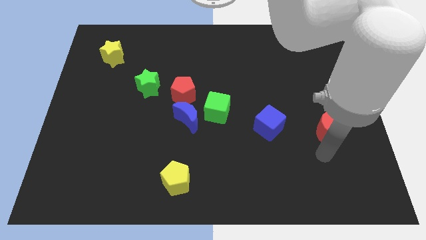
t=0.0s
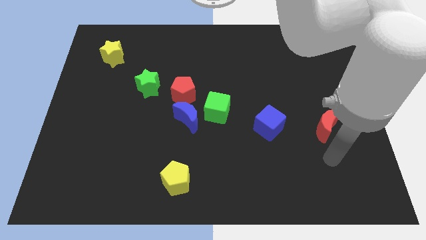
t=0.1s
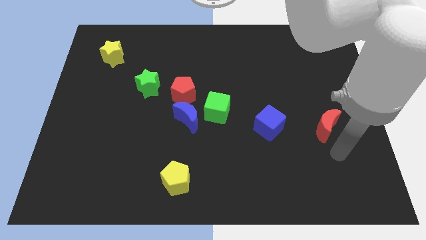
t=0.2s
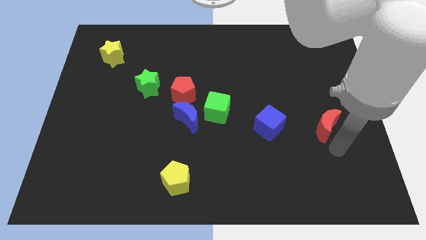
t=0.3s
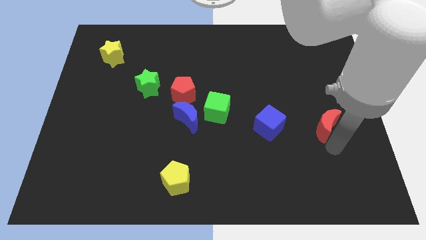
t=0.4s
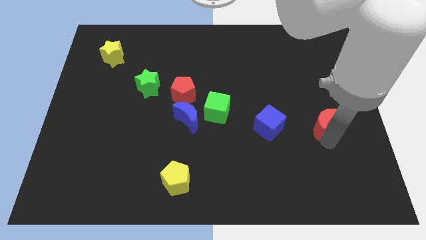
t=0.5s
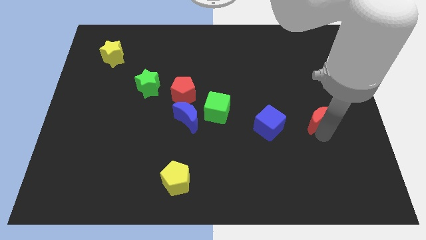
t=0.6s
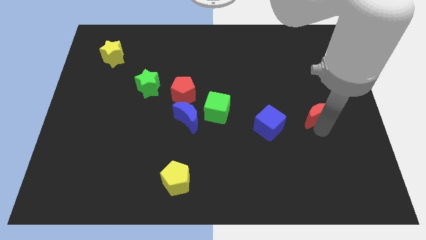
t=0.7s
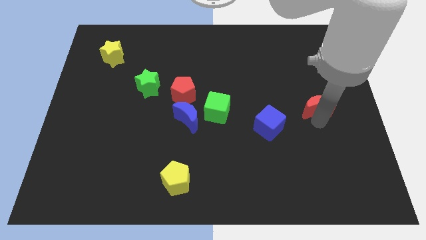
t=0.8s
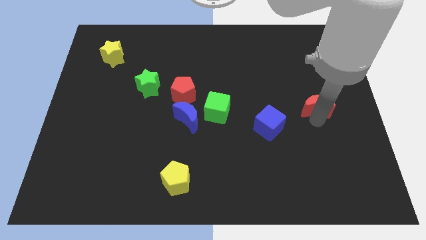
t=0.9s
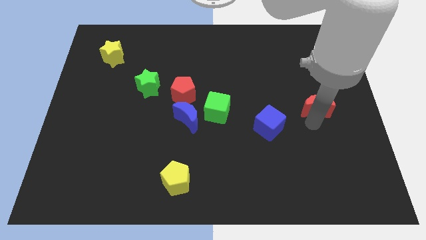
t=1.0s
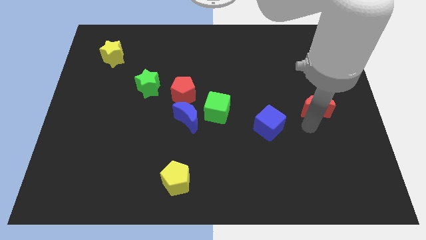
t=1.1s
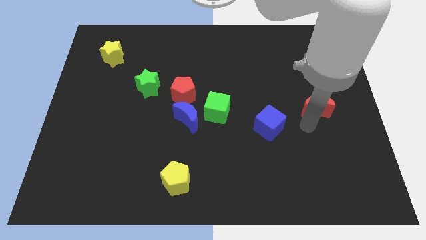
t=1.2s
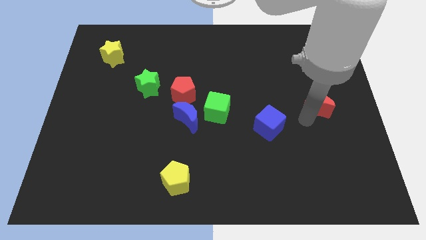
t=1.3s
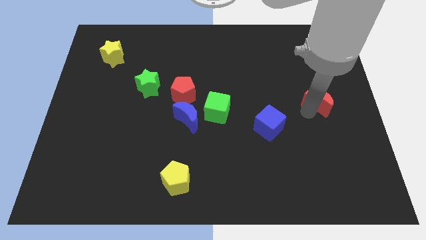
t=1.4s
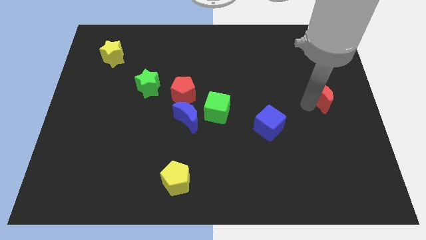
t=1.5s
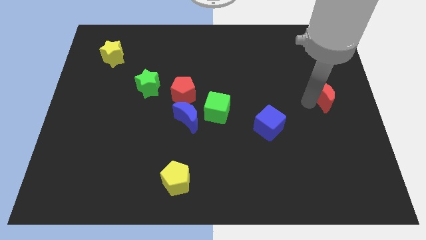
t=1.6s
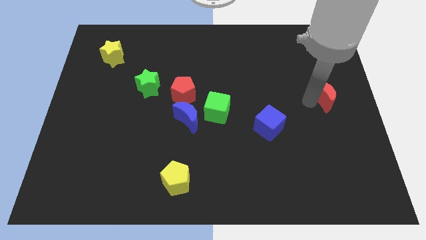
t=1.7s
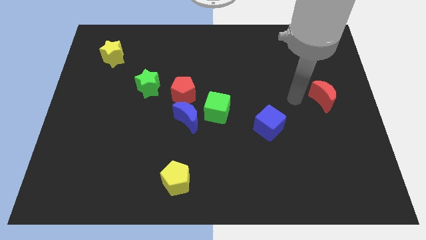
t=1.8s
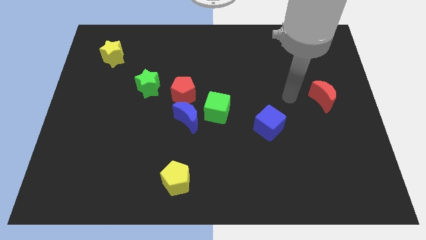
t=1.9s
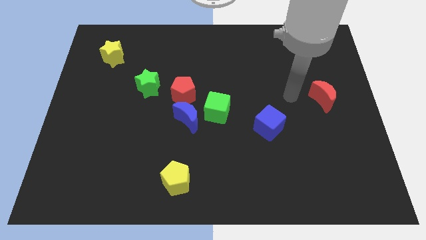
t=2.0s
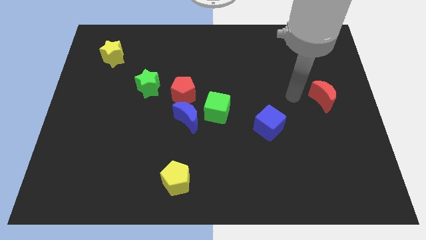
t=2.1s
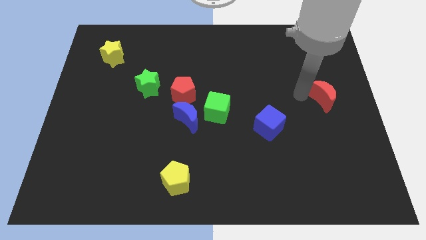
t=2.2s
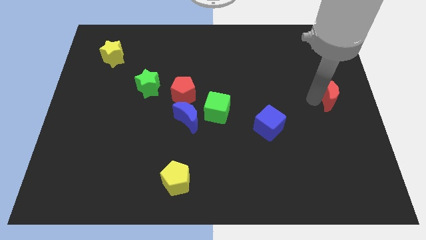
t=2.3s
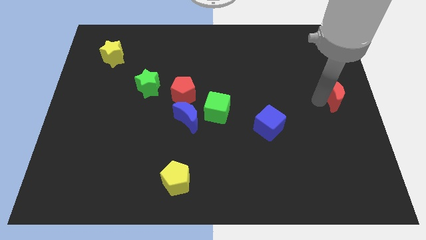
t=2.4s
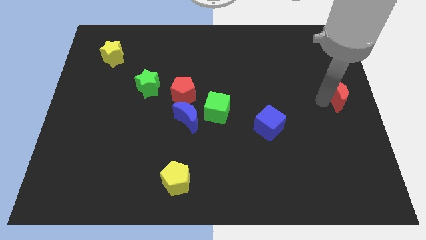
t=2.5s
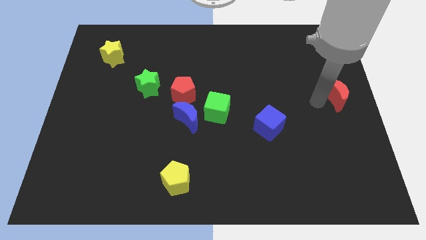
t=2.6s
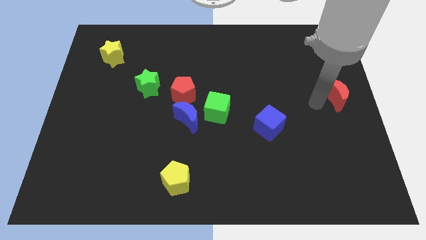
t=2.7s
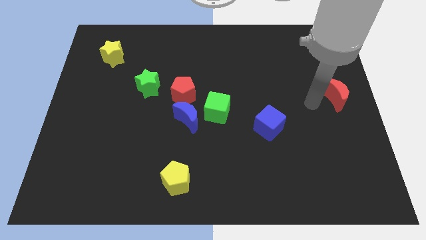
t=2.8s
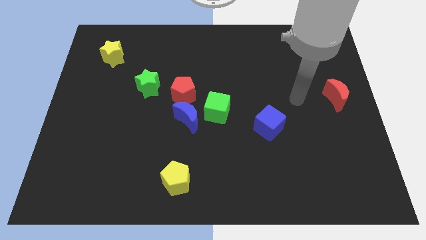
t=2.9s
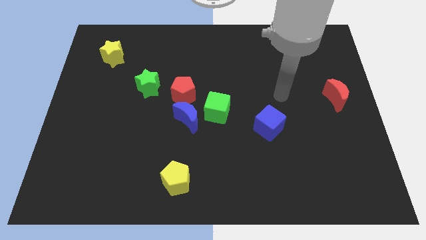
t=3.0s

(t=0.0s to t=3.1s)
push red moon towards center right

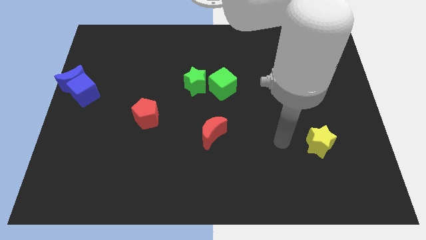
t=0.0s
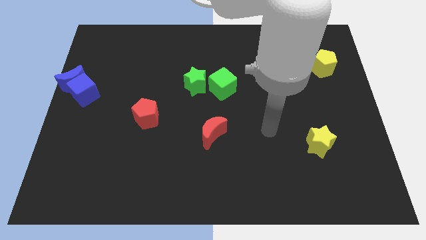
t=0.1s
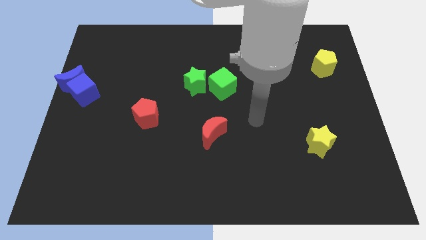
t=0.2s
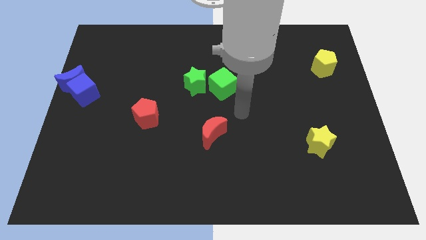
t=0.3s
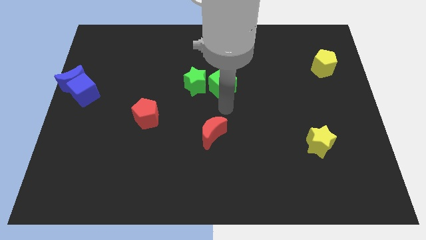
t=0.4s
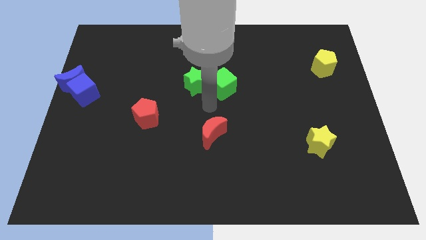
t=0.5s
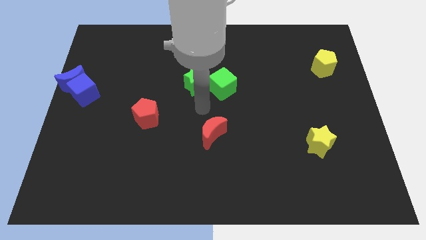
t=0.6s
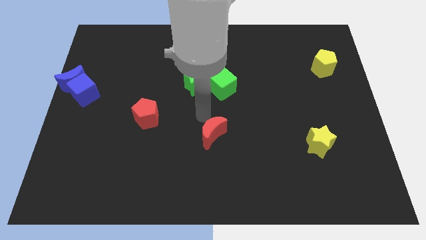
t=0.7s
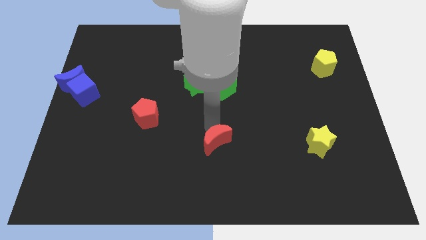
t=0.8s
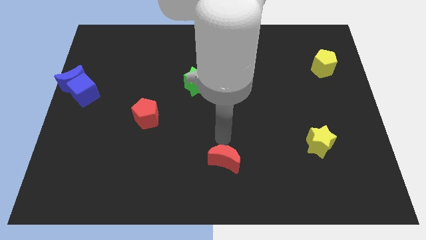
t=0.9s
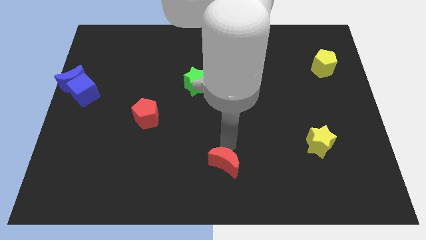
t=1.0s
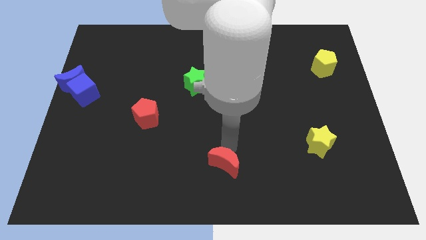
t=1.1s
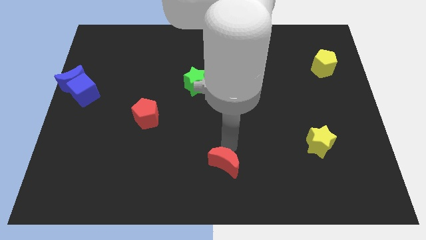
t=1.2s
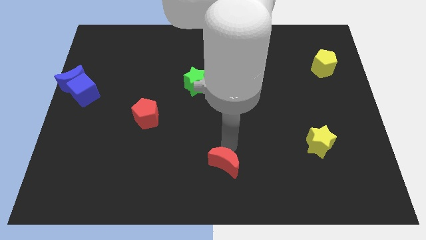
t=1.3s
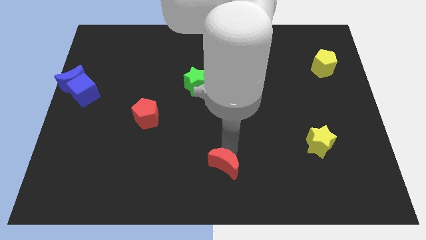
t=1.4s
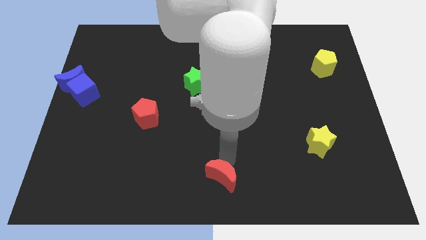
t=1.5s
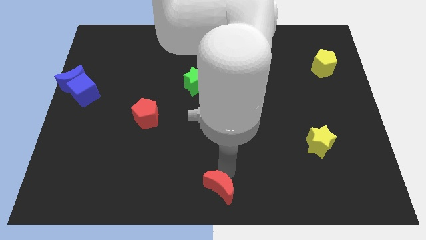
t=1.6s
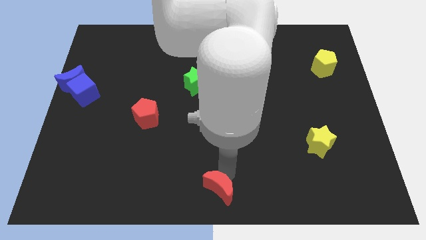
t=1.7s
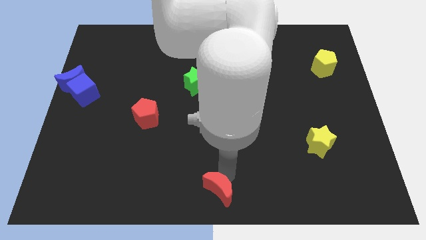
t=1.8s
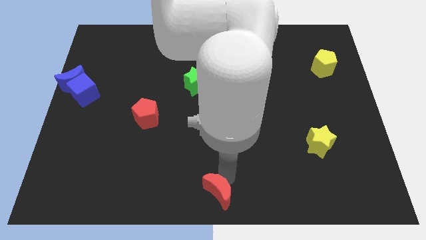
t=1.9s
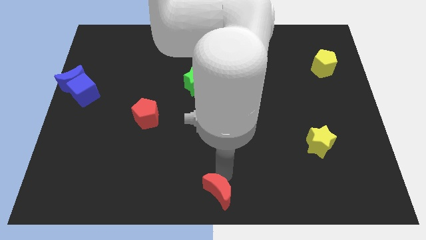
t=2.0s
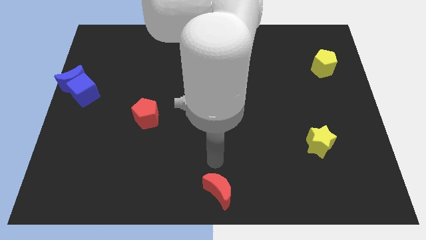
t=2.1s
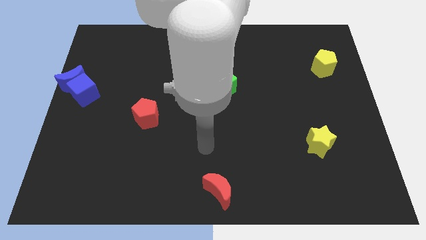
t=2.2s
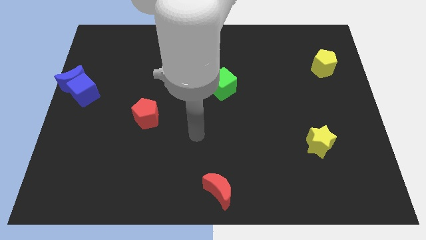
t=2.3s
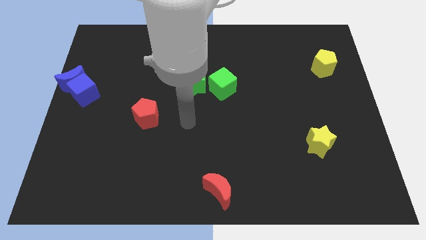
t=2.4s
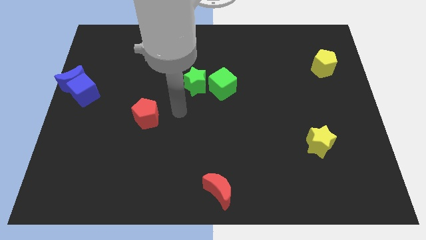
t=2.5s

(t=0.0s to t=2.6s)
move the red crescent to the bottom center of the board

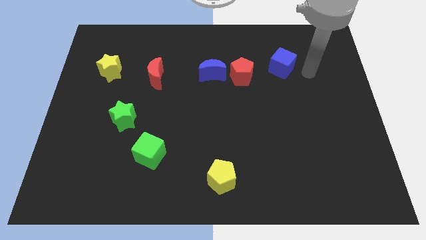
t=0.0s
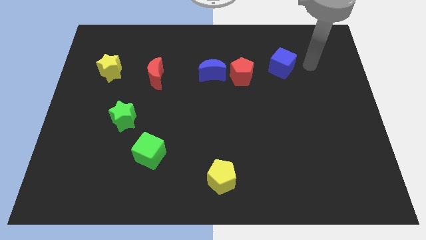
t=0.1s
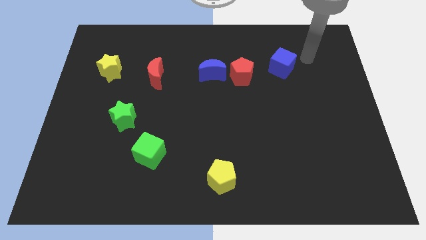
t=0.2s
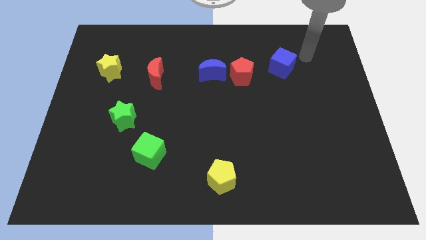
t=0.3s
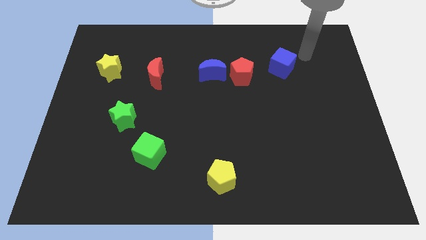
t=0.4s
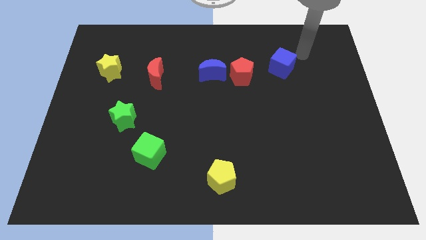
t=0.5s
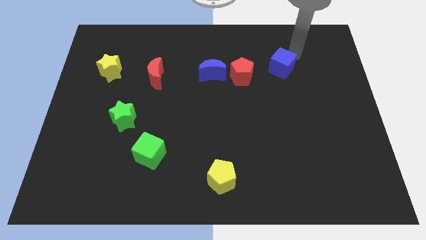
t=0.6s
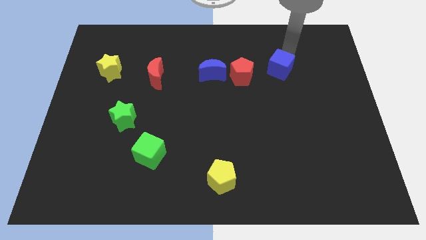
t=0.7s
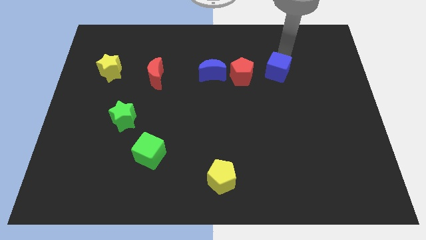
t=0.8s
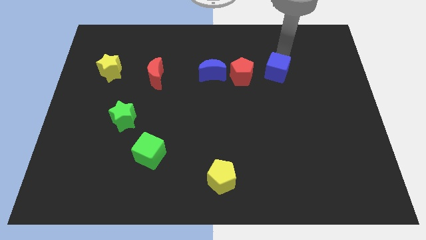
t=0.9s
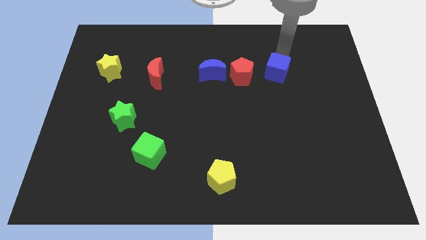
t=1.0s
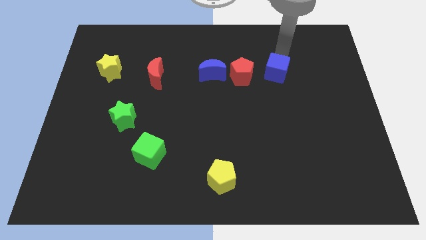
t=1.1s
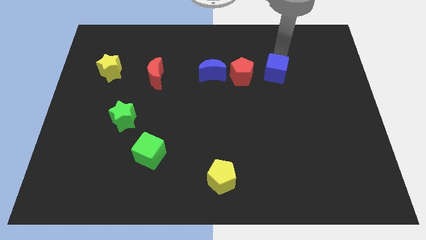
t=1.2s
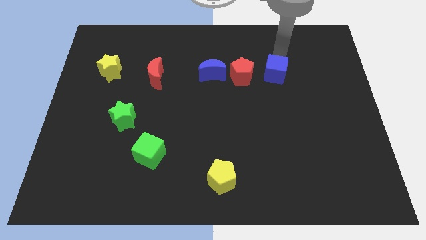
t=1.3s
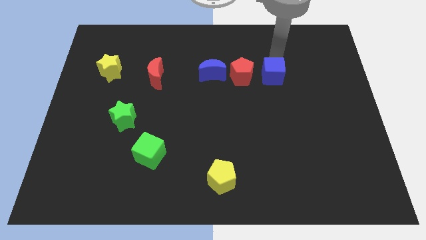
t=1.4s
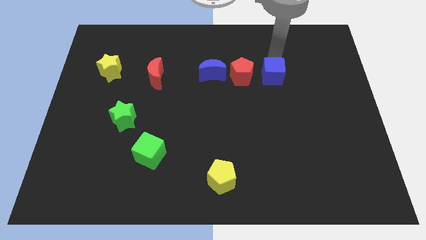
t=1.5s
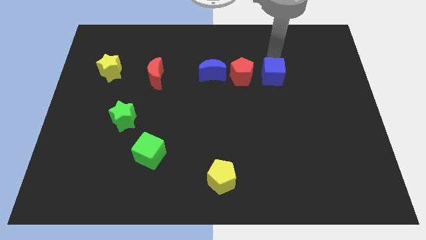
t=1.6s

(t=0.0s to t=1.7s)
move the blue cube to the right side of the red pentagon

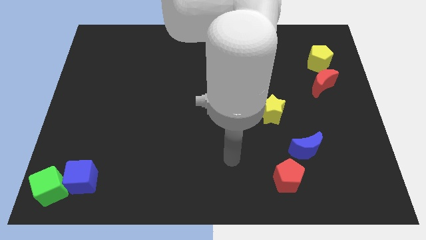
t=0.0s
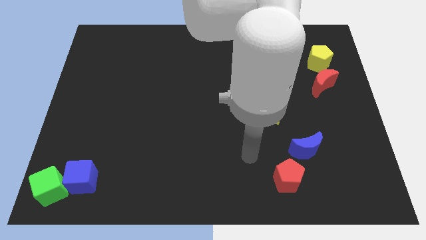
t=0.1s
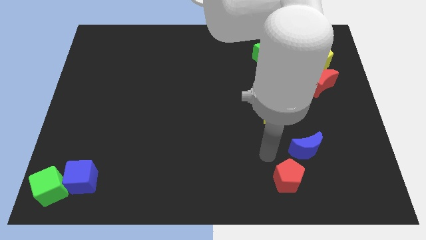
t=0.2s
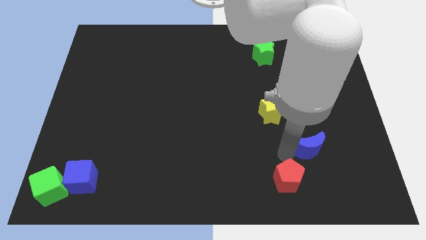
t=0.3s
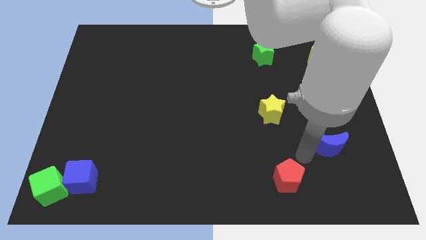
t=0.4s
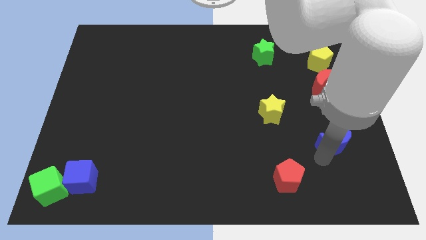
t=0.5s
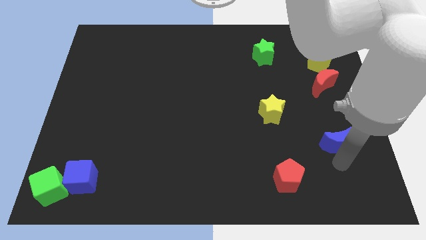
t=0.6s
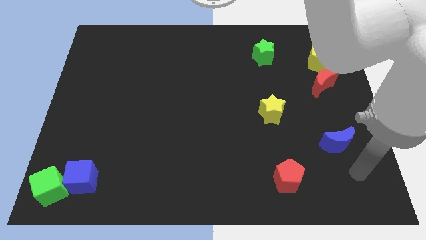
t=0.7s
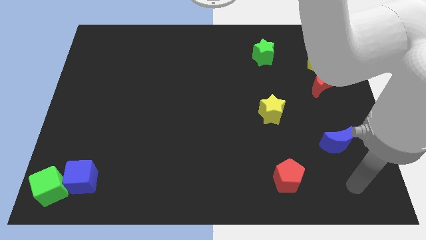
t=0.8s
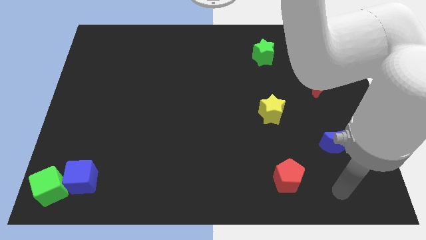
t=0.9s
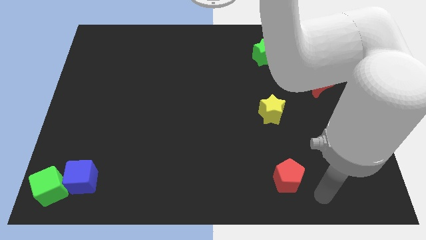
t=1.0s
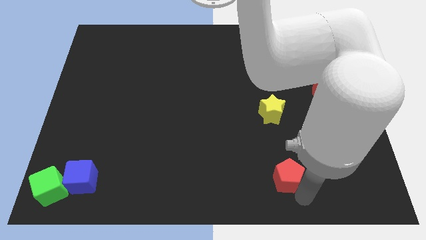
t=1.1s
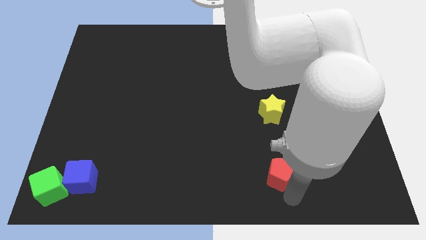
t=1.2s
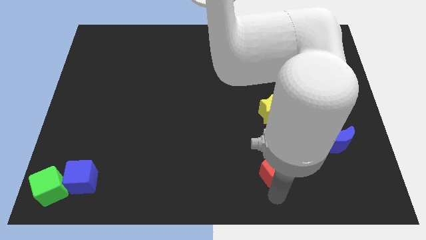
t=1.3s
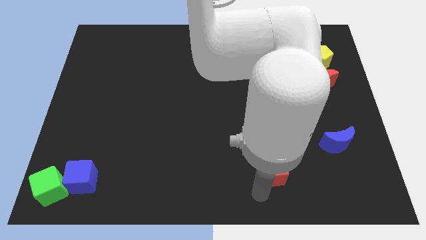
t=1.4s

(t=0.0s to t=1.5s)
move the red pentagon upwards
